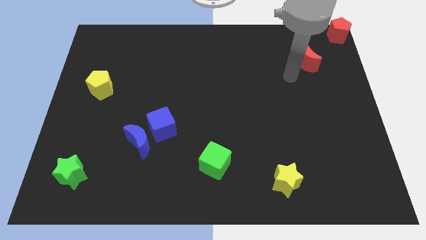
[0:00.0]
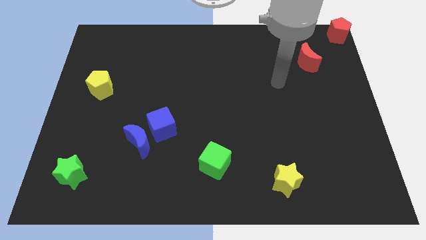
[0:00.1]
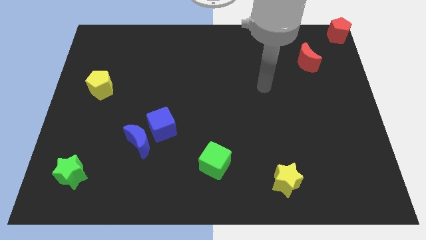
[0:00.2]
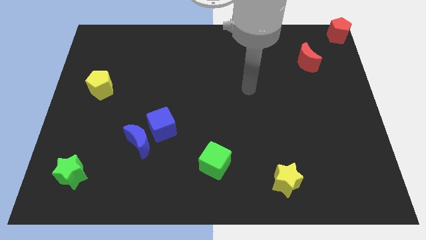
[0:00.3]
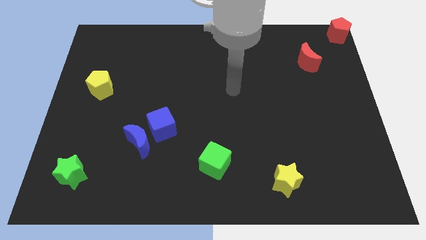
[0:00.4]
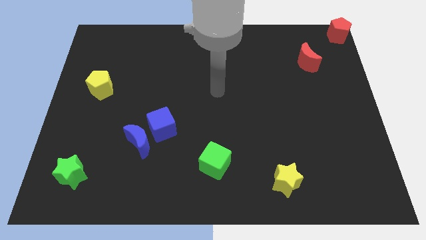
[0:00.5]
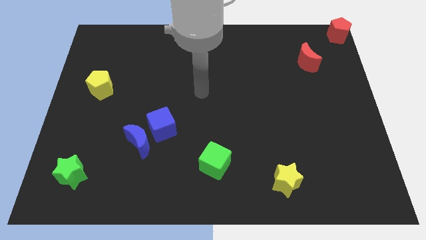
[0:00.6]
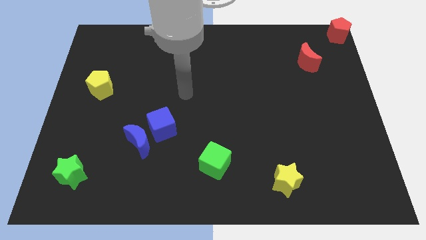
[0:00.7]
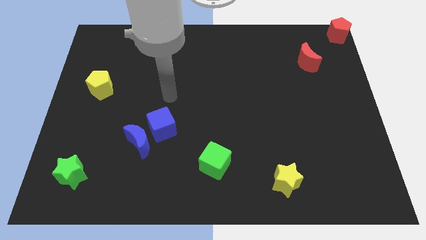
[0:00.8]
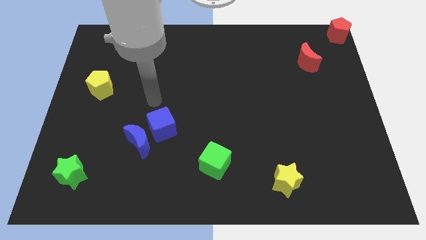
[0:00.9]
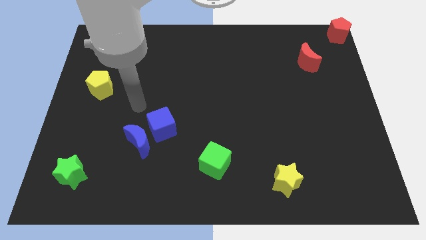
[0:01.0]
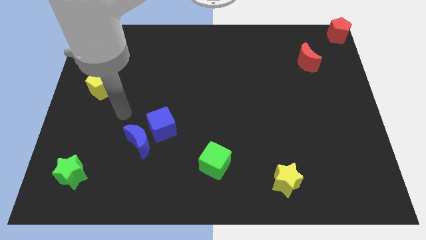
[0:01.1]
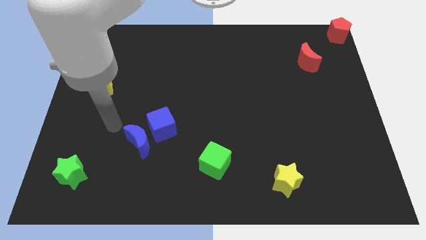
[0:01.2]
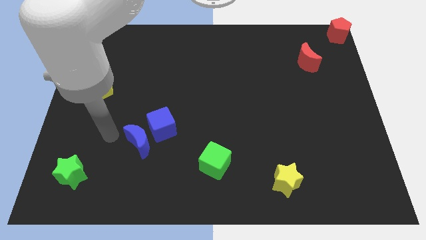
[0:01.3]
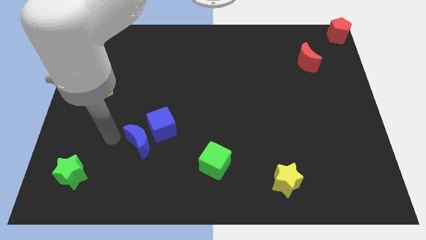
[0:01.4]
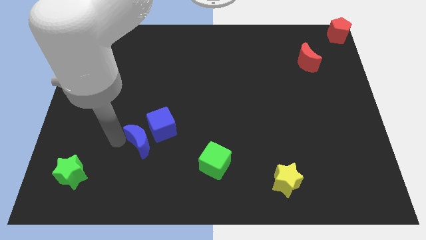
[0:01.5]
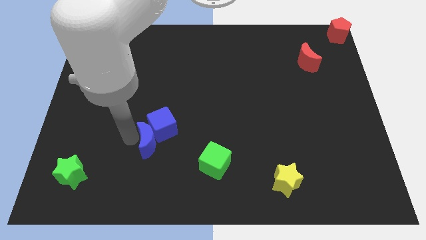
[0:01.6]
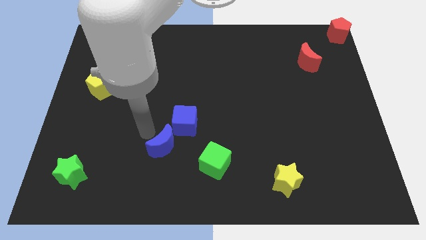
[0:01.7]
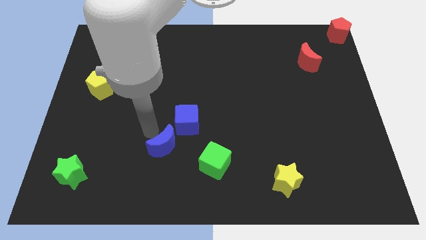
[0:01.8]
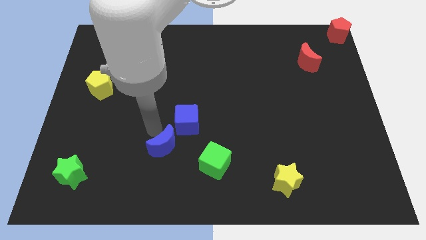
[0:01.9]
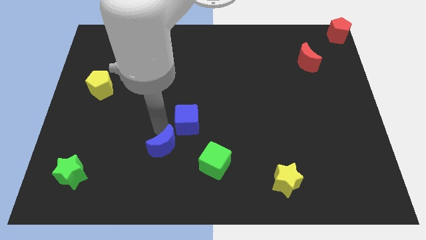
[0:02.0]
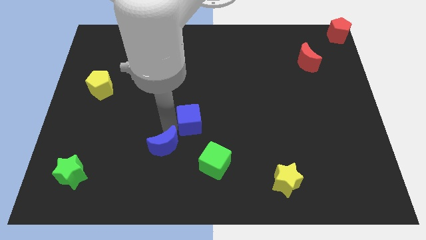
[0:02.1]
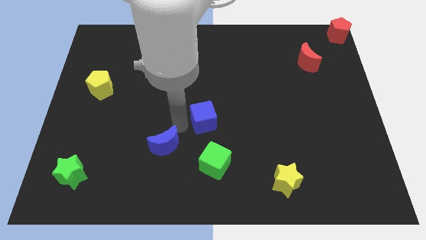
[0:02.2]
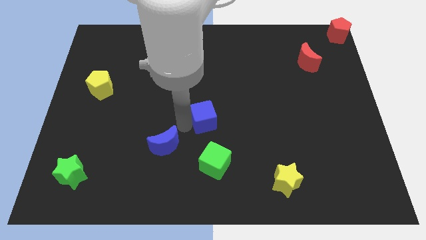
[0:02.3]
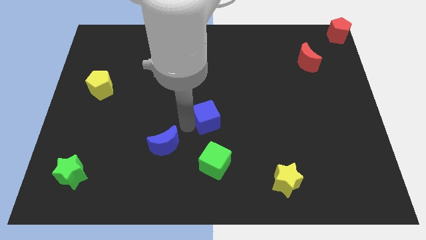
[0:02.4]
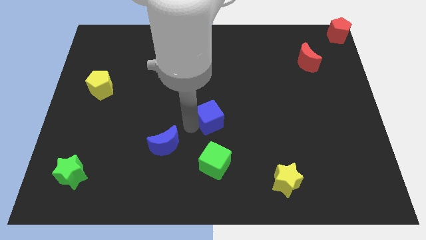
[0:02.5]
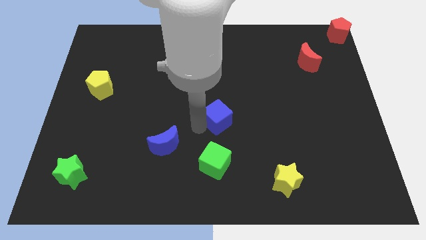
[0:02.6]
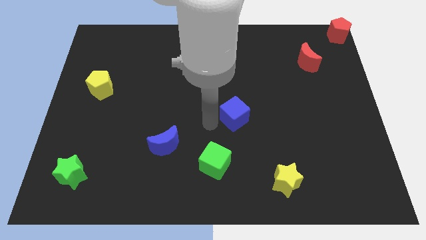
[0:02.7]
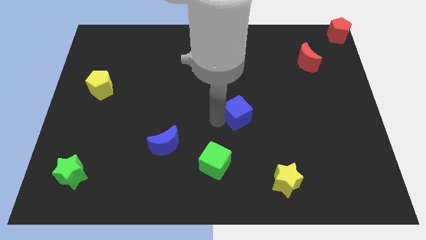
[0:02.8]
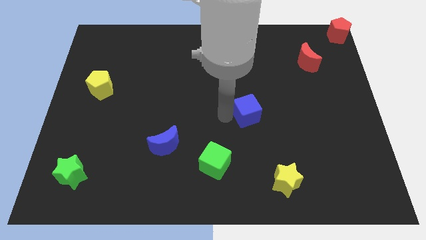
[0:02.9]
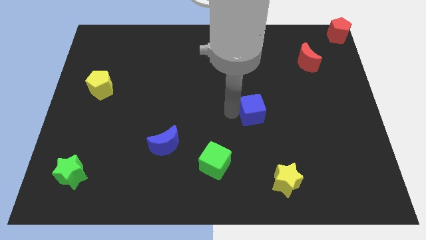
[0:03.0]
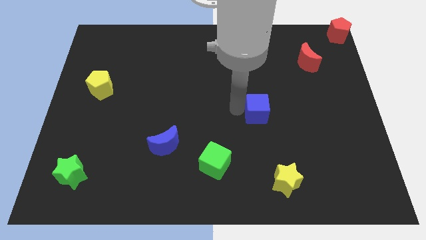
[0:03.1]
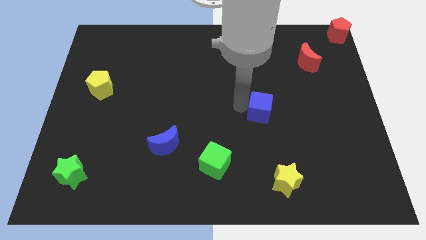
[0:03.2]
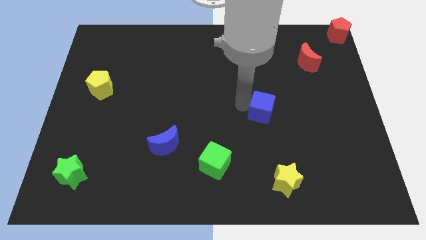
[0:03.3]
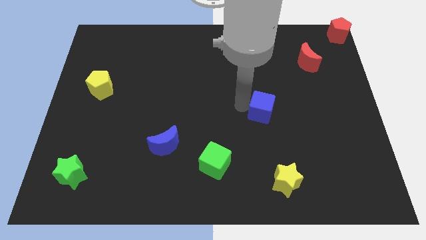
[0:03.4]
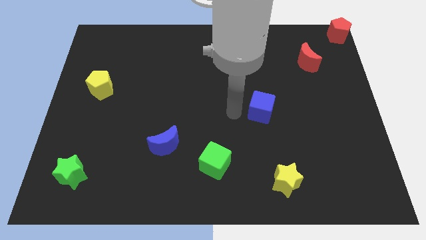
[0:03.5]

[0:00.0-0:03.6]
push the blue cube to the top right of the green cube

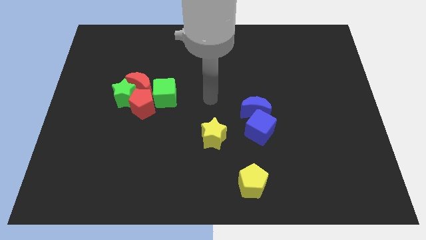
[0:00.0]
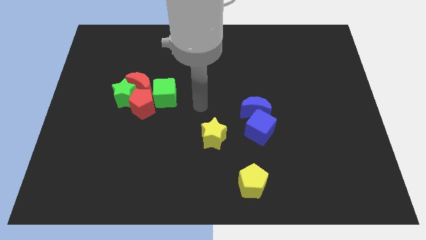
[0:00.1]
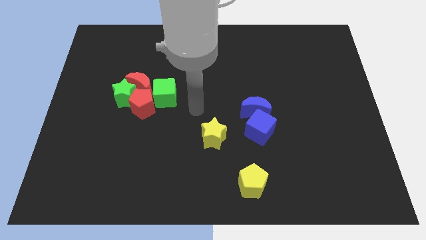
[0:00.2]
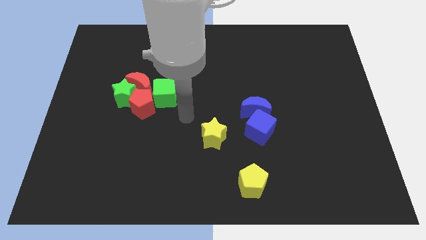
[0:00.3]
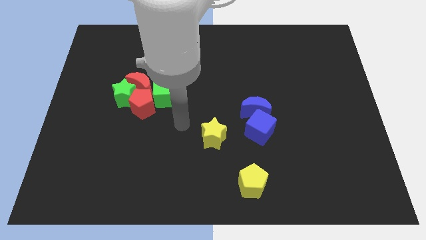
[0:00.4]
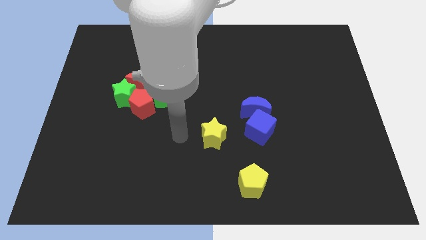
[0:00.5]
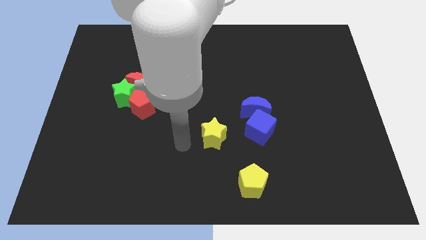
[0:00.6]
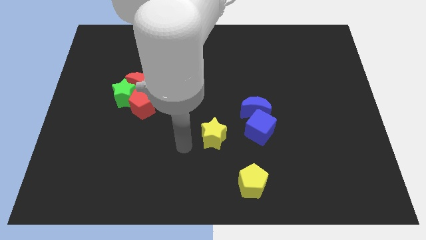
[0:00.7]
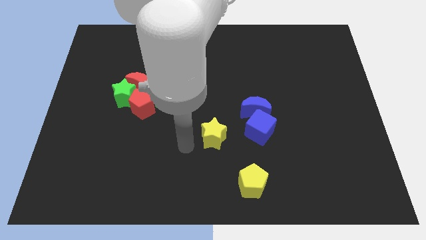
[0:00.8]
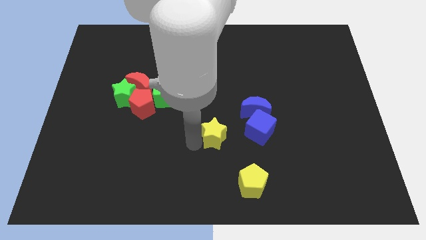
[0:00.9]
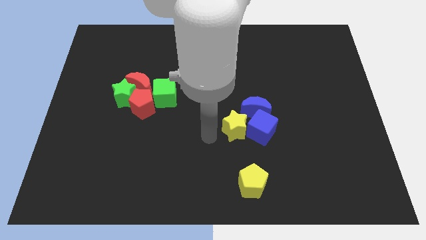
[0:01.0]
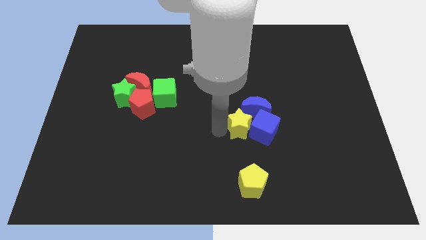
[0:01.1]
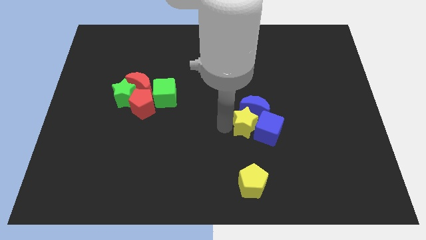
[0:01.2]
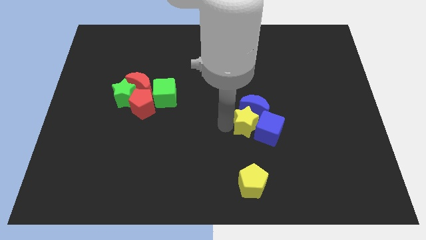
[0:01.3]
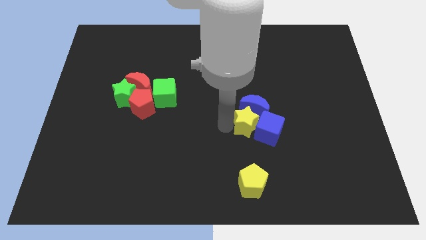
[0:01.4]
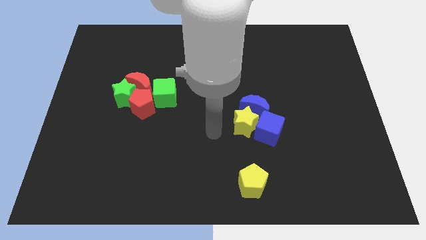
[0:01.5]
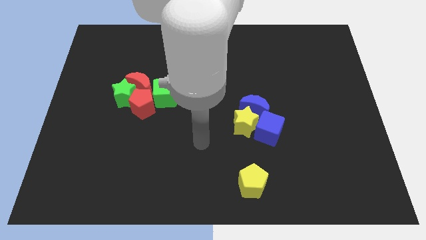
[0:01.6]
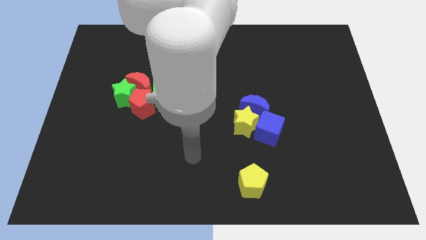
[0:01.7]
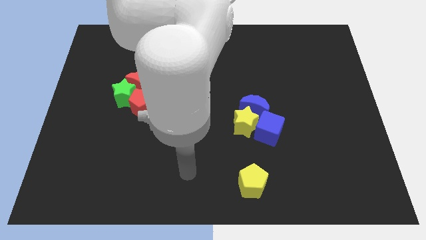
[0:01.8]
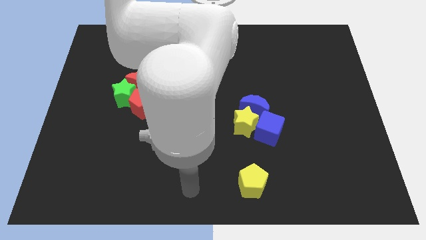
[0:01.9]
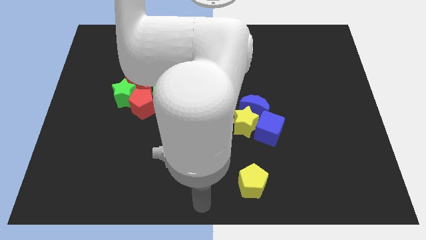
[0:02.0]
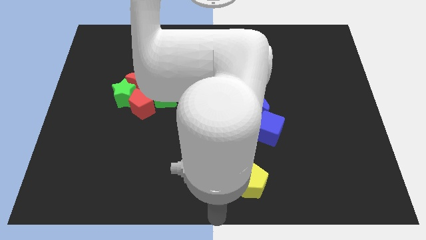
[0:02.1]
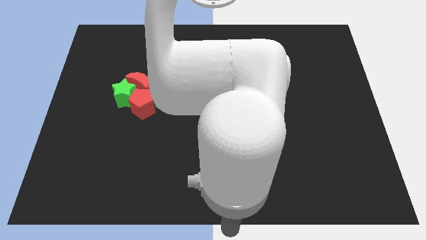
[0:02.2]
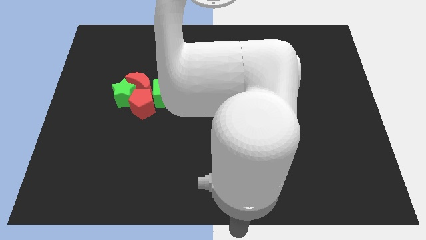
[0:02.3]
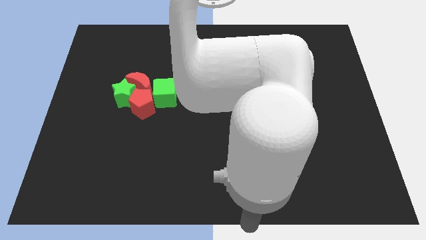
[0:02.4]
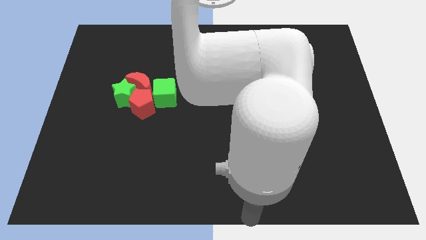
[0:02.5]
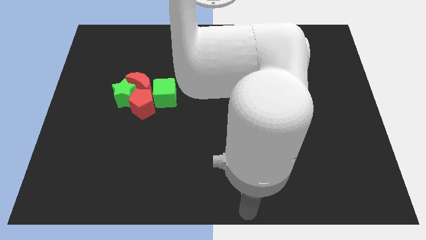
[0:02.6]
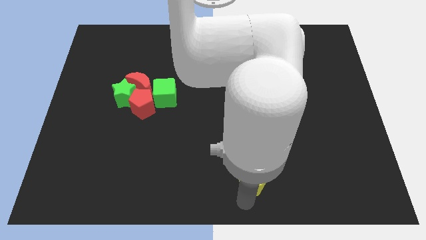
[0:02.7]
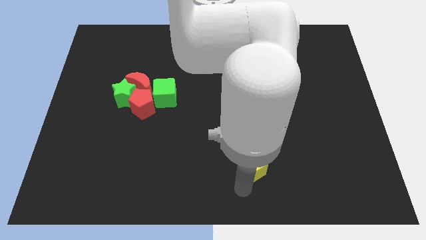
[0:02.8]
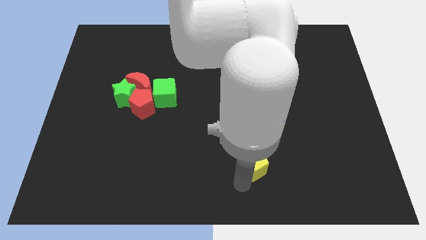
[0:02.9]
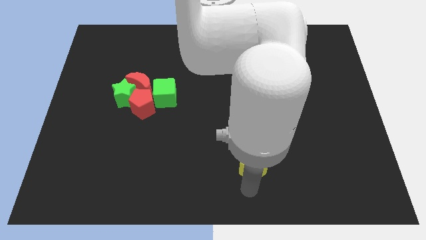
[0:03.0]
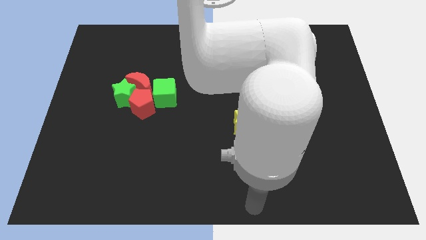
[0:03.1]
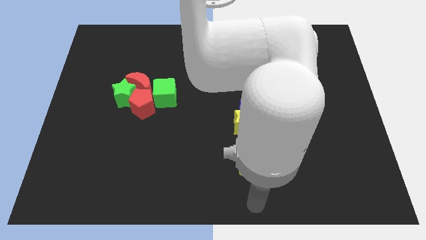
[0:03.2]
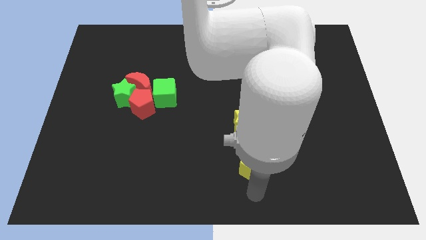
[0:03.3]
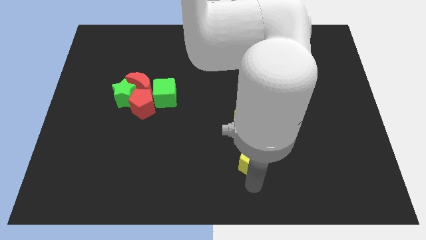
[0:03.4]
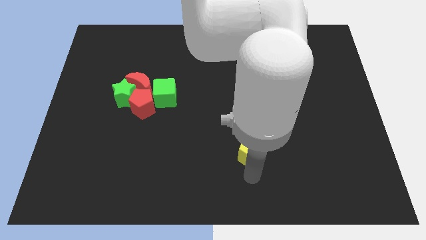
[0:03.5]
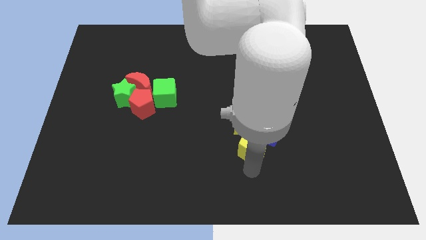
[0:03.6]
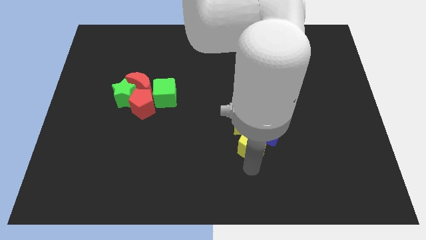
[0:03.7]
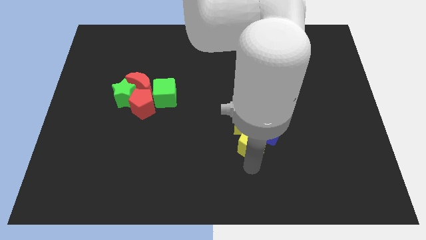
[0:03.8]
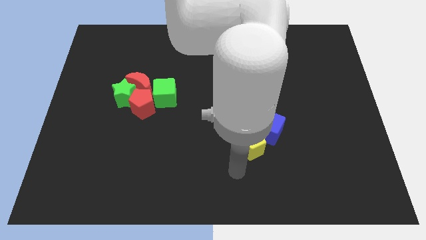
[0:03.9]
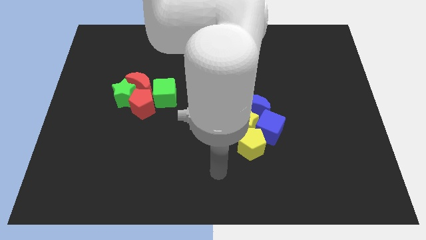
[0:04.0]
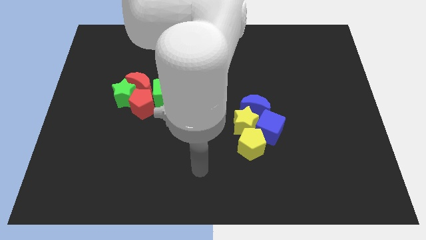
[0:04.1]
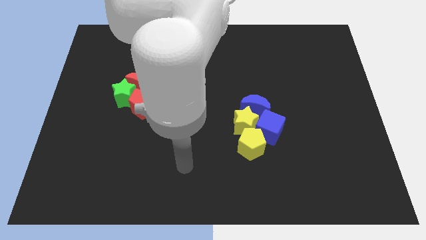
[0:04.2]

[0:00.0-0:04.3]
push the yellow blocks into the blue blocks

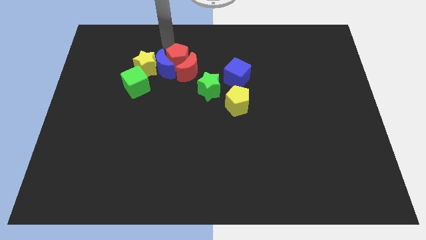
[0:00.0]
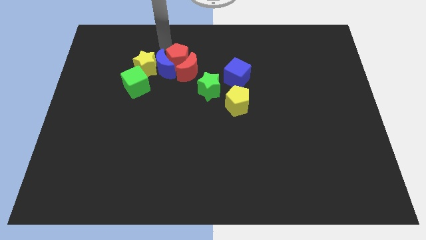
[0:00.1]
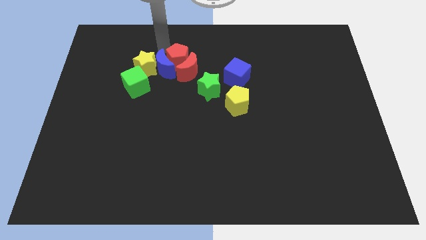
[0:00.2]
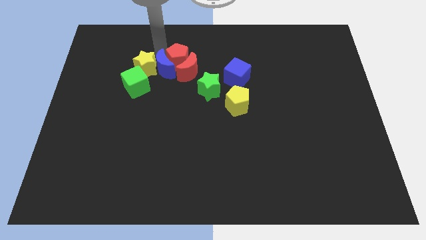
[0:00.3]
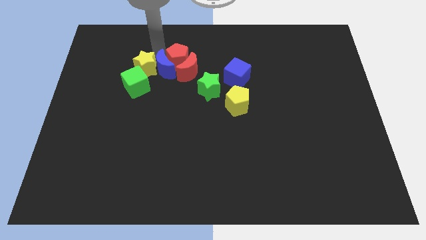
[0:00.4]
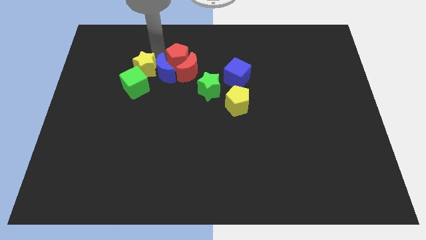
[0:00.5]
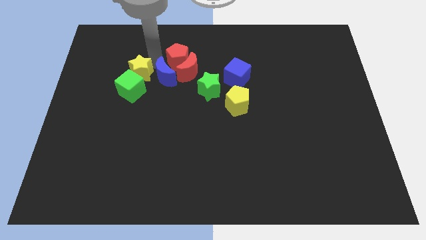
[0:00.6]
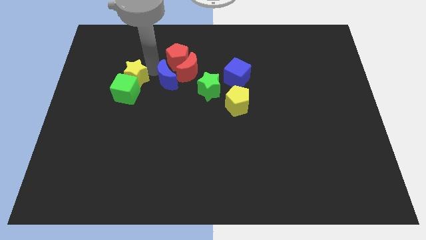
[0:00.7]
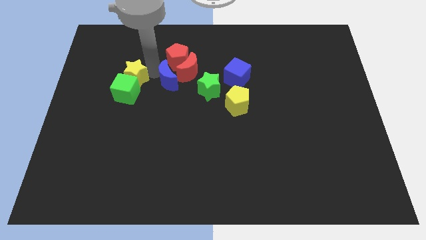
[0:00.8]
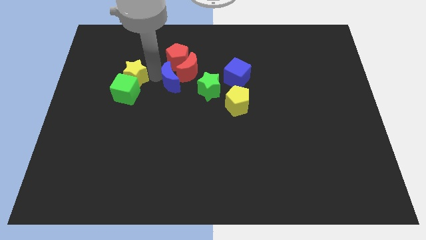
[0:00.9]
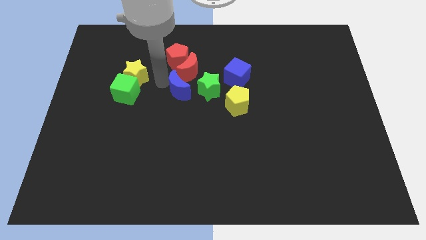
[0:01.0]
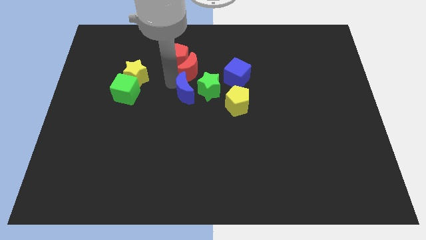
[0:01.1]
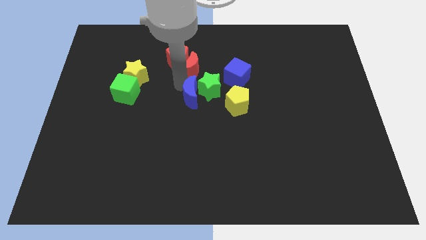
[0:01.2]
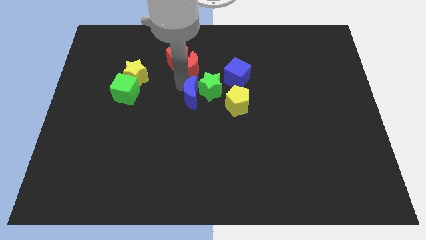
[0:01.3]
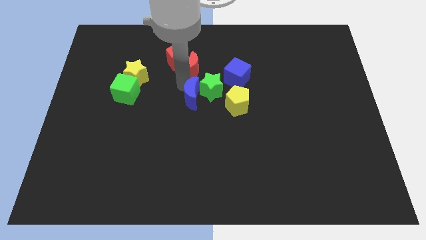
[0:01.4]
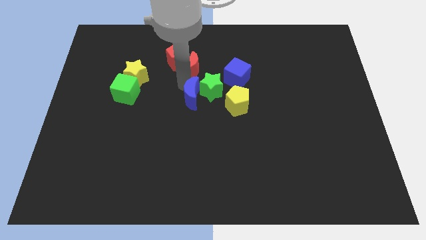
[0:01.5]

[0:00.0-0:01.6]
push the blue crescent into the green star
